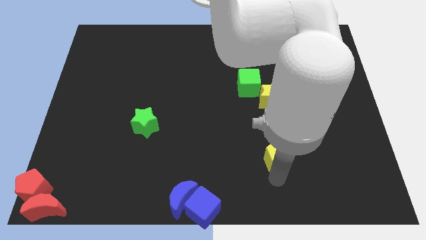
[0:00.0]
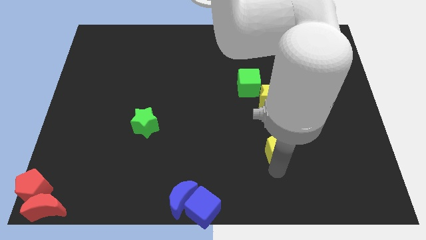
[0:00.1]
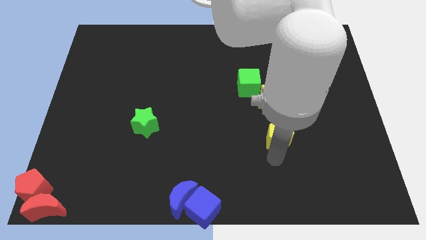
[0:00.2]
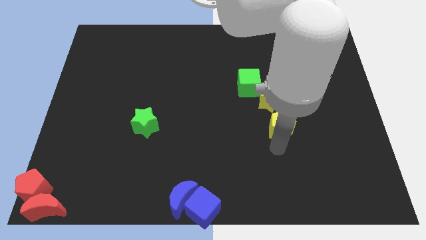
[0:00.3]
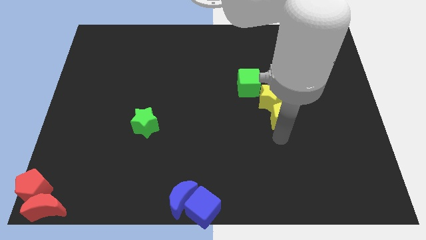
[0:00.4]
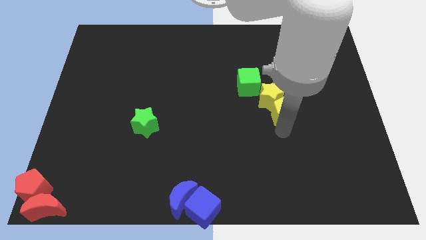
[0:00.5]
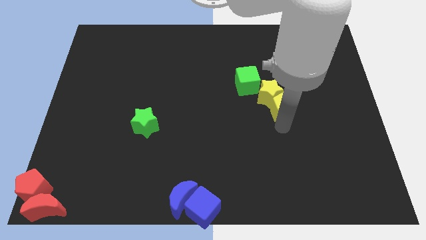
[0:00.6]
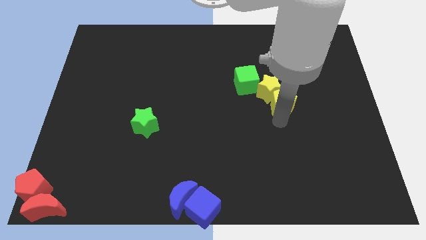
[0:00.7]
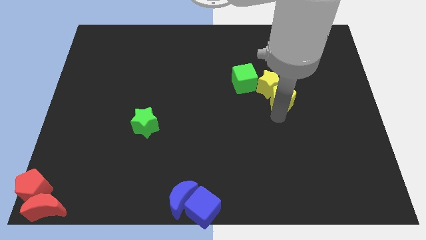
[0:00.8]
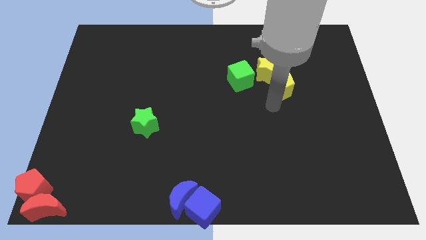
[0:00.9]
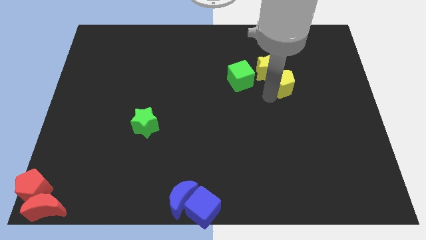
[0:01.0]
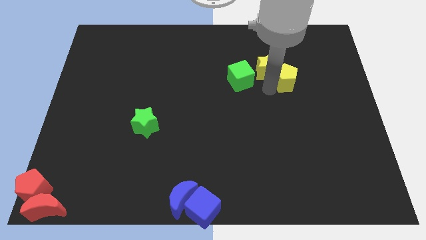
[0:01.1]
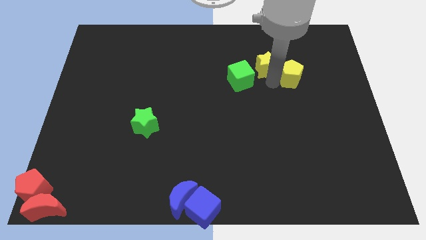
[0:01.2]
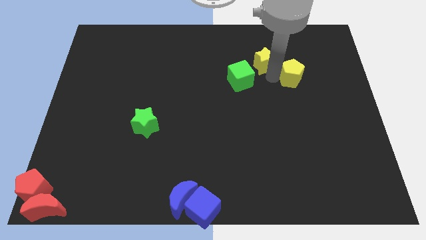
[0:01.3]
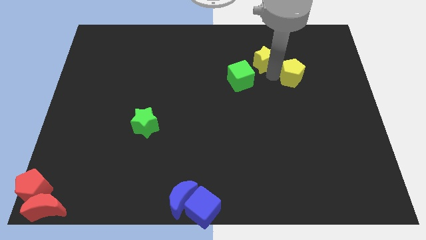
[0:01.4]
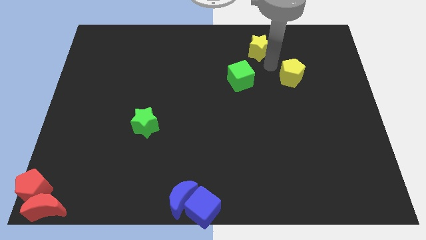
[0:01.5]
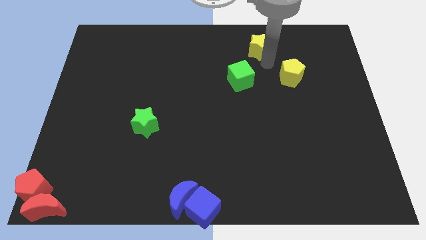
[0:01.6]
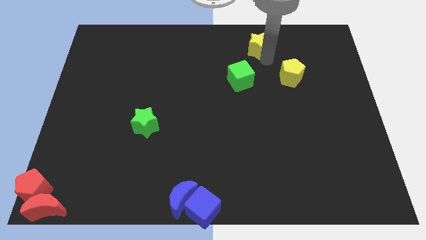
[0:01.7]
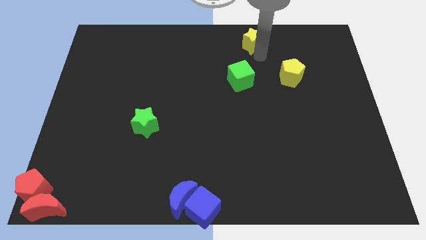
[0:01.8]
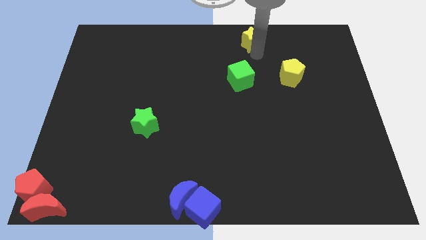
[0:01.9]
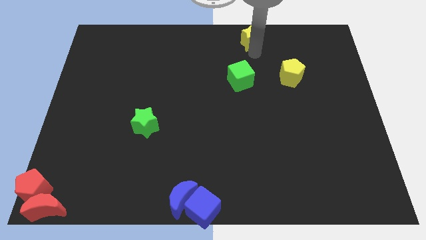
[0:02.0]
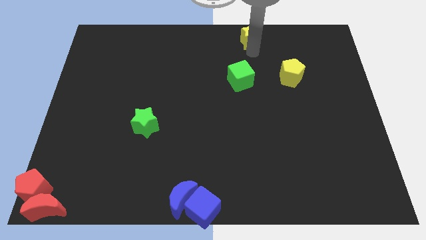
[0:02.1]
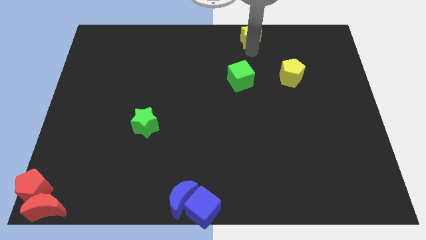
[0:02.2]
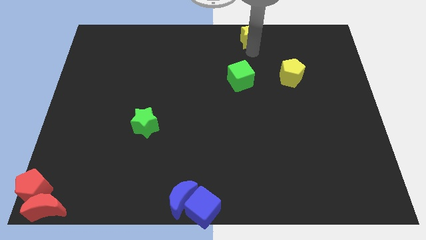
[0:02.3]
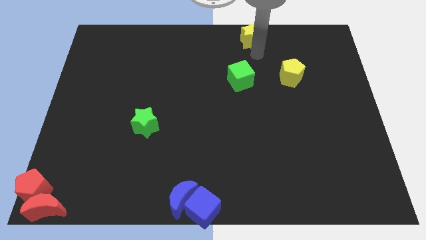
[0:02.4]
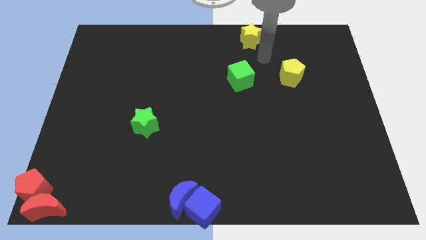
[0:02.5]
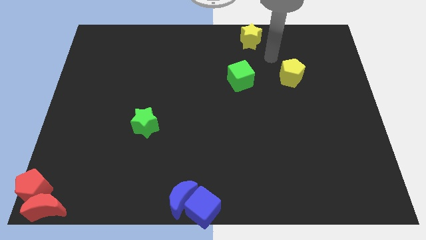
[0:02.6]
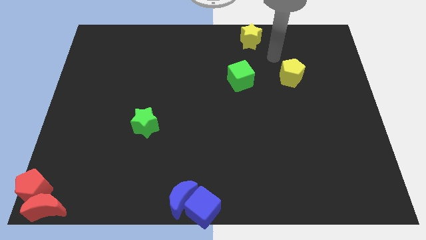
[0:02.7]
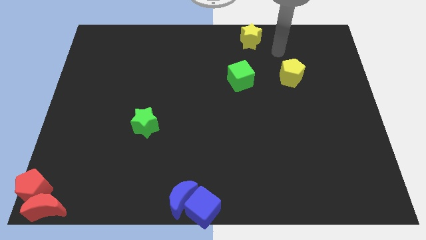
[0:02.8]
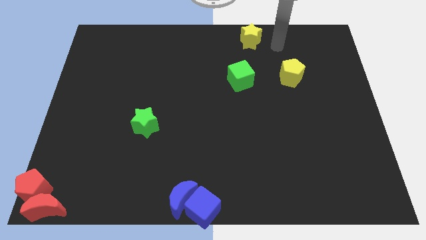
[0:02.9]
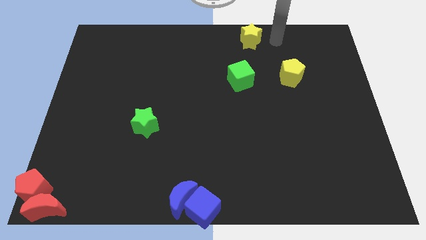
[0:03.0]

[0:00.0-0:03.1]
push the yellow star towards the top center of the board

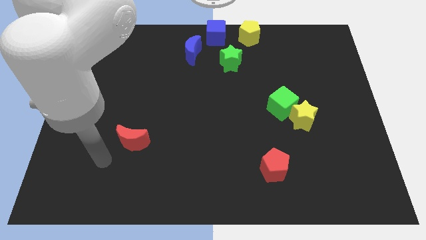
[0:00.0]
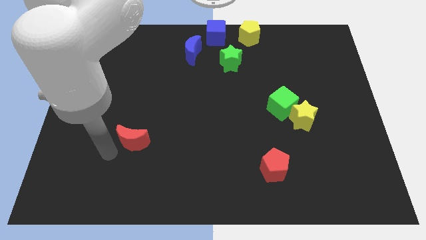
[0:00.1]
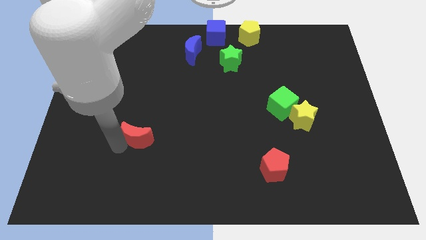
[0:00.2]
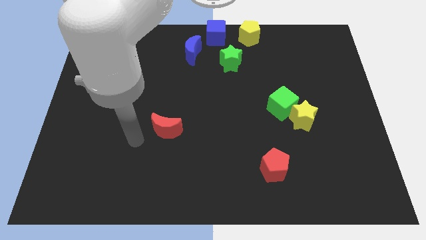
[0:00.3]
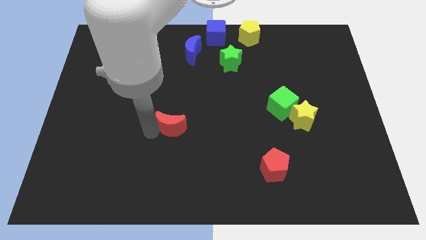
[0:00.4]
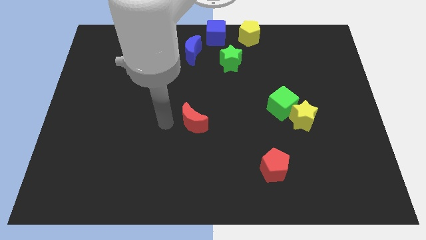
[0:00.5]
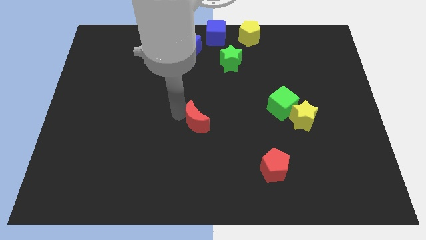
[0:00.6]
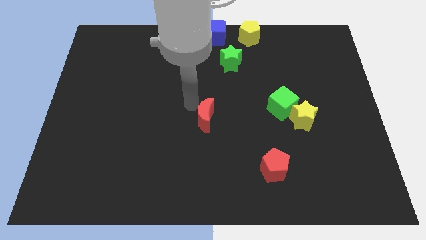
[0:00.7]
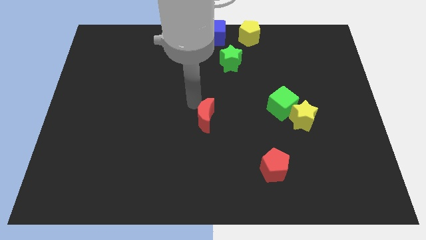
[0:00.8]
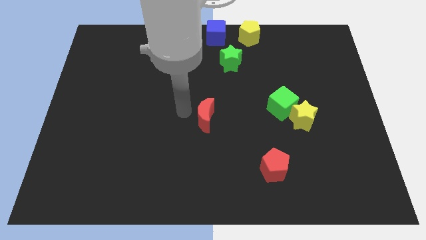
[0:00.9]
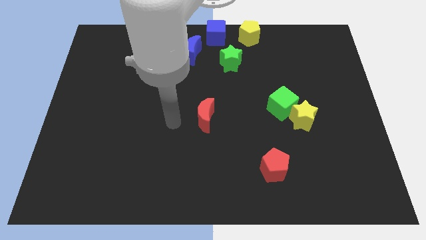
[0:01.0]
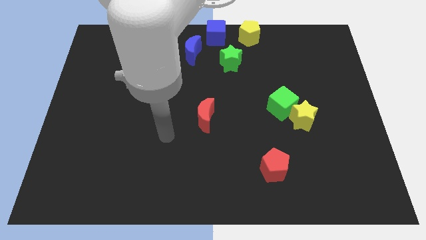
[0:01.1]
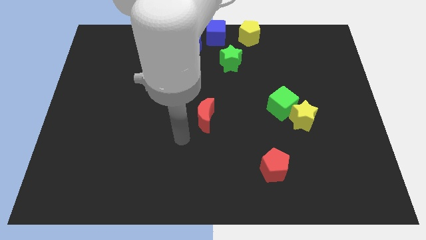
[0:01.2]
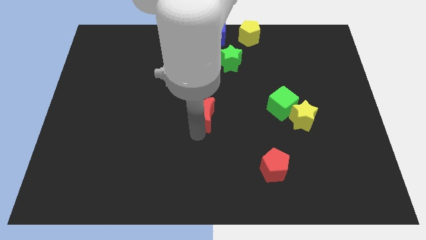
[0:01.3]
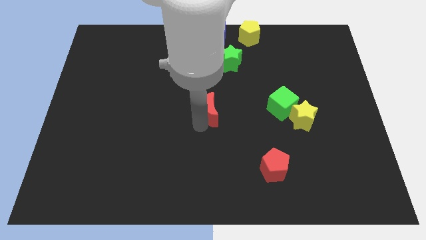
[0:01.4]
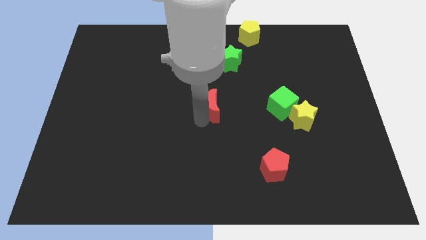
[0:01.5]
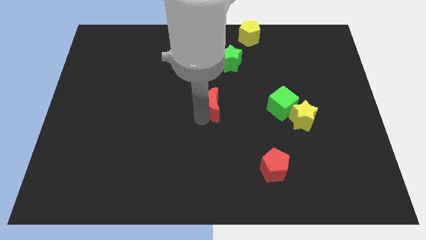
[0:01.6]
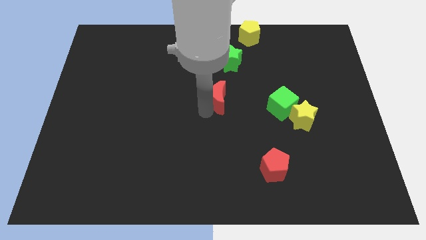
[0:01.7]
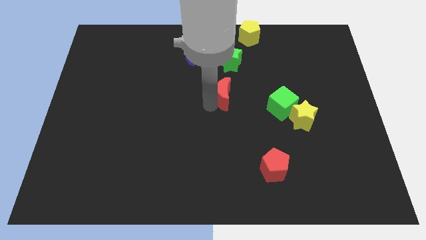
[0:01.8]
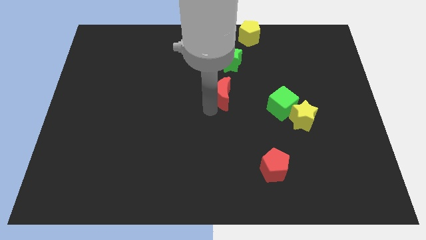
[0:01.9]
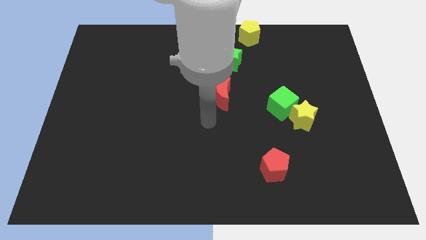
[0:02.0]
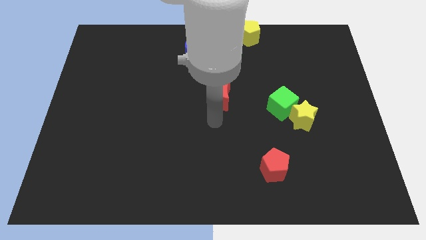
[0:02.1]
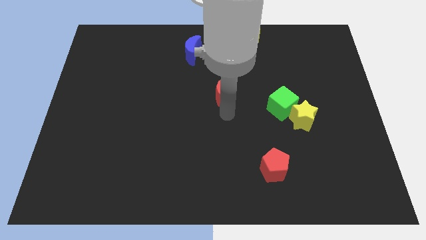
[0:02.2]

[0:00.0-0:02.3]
push the red moon to the bottom side of the green star

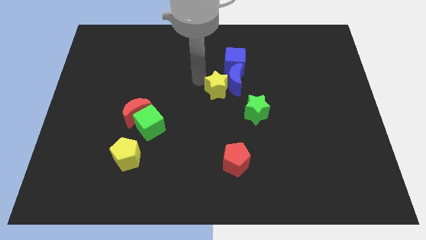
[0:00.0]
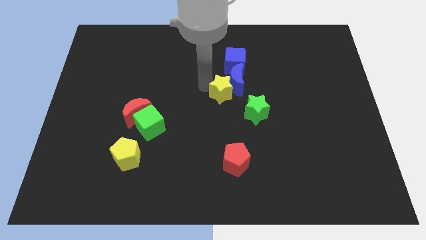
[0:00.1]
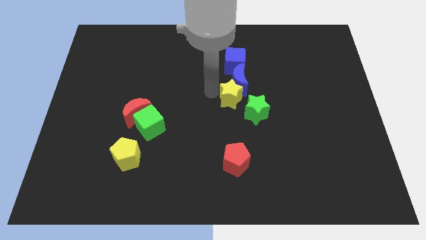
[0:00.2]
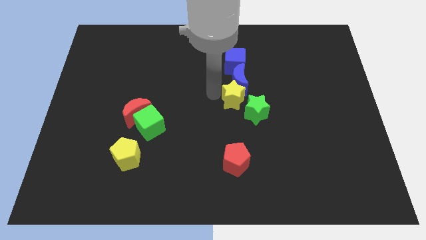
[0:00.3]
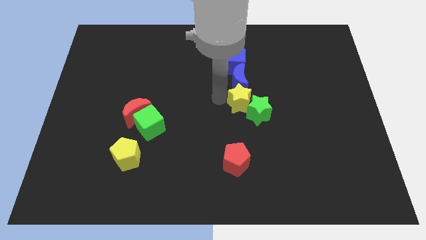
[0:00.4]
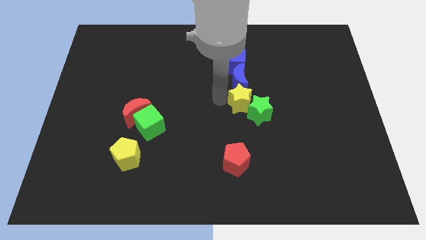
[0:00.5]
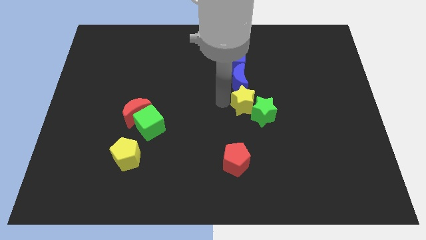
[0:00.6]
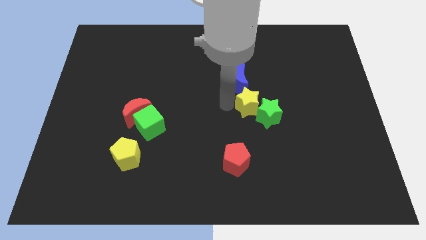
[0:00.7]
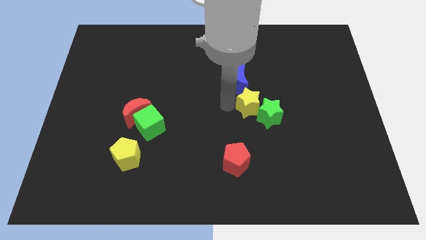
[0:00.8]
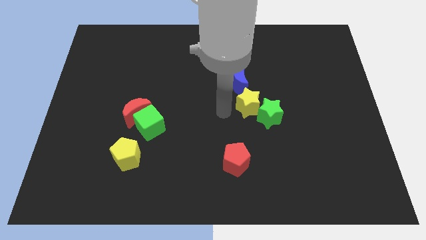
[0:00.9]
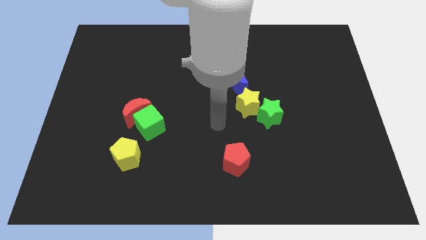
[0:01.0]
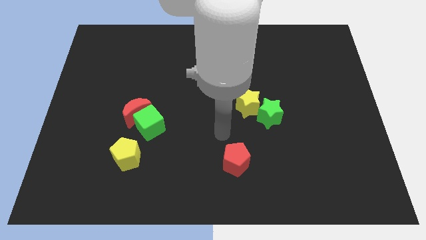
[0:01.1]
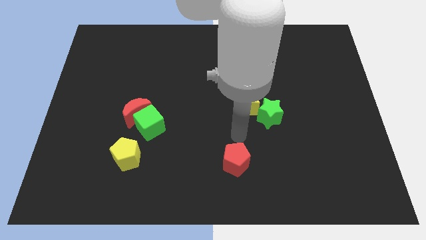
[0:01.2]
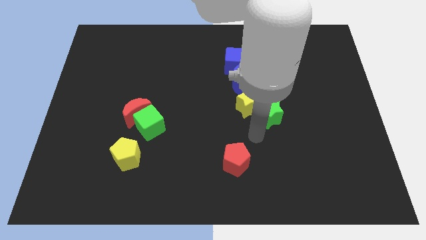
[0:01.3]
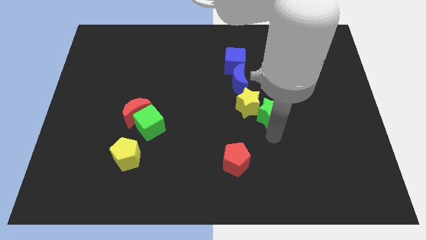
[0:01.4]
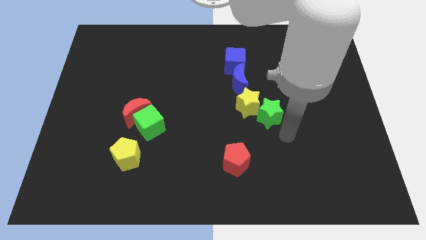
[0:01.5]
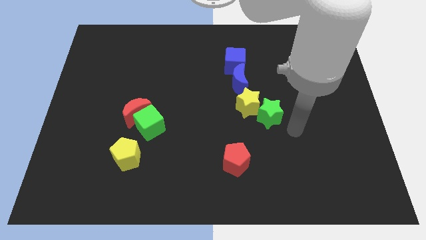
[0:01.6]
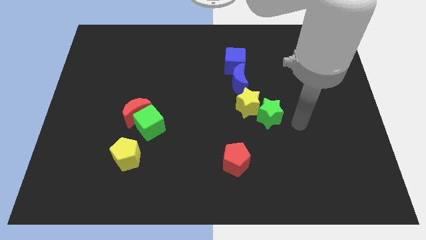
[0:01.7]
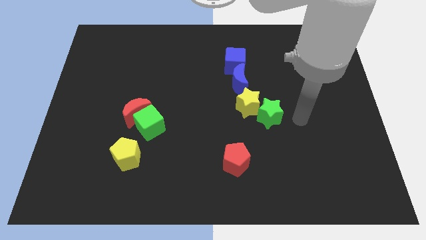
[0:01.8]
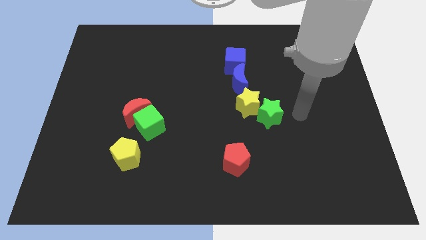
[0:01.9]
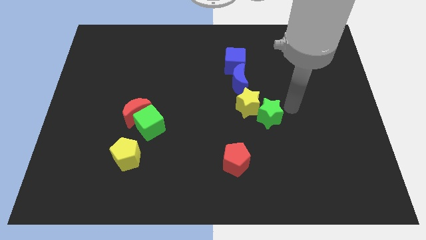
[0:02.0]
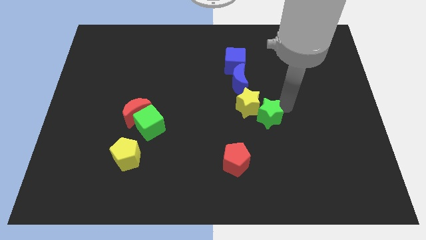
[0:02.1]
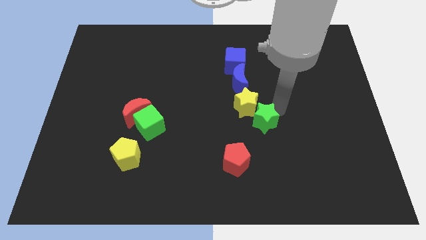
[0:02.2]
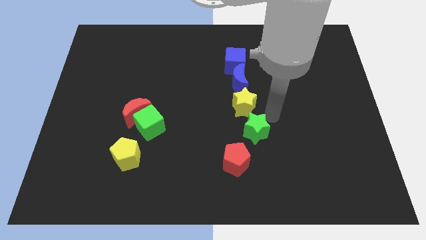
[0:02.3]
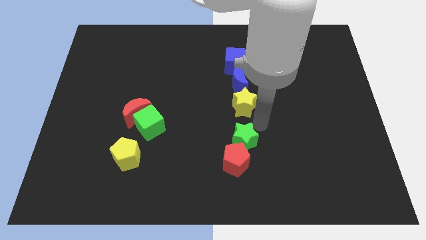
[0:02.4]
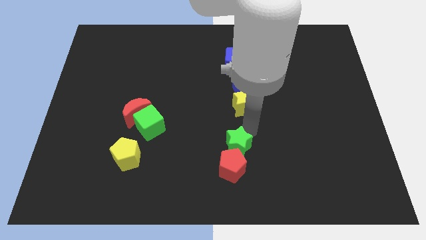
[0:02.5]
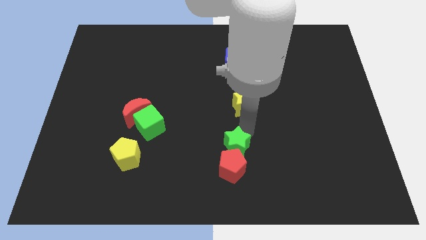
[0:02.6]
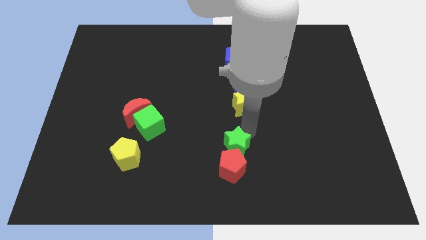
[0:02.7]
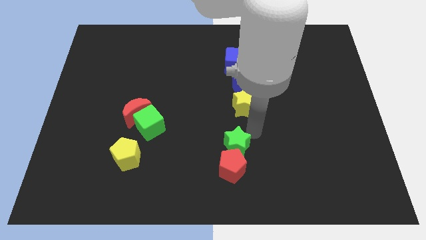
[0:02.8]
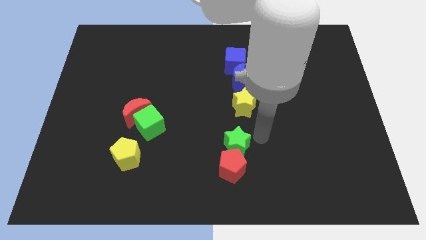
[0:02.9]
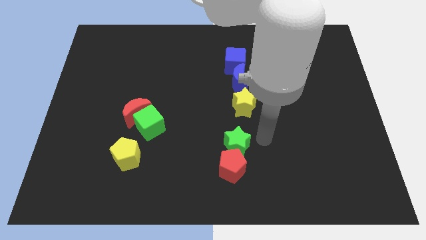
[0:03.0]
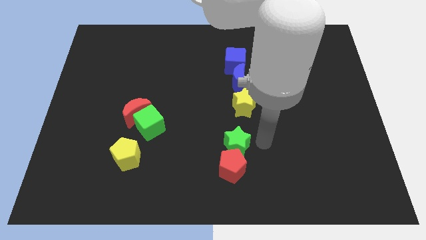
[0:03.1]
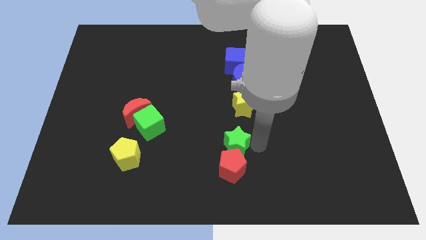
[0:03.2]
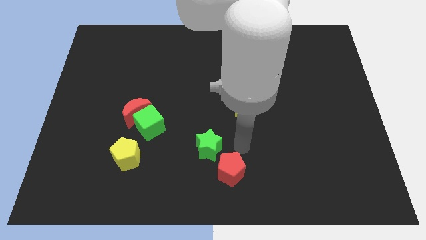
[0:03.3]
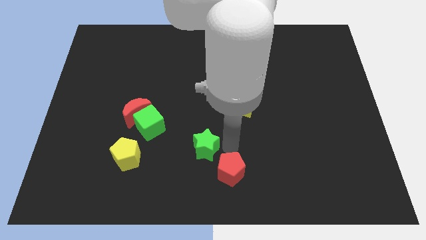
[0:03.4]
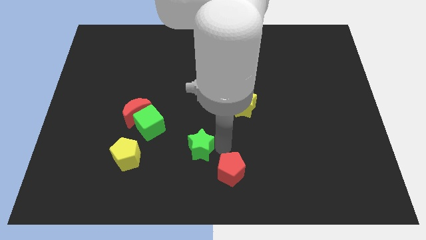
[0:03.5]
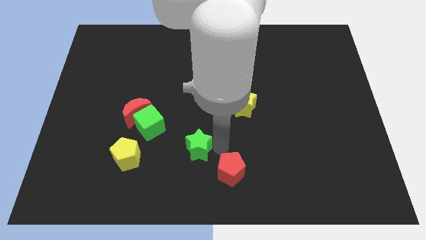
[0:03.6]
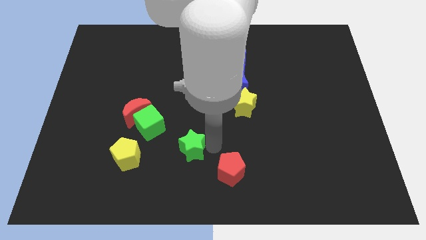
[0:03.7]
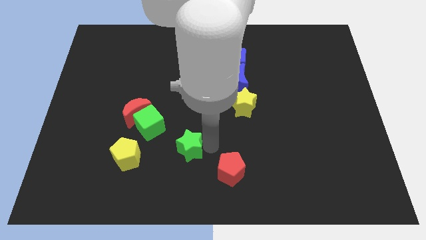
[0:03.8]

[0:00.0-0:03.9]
slide both the stars diagonal to each other
